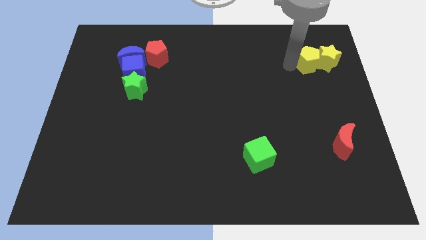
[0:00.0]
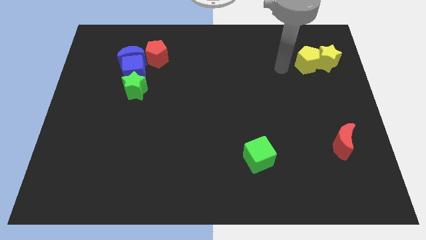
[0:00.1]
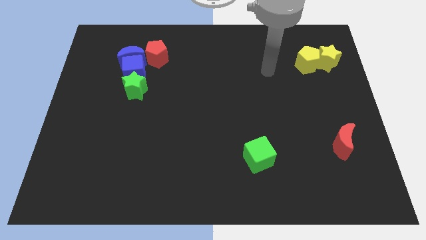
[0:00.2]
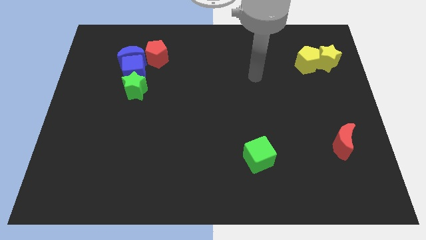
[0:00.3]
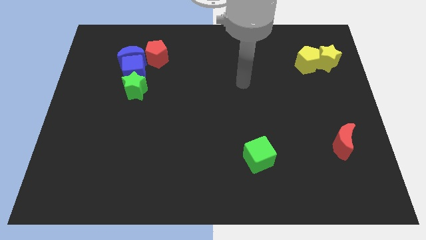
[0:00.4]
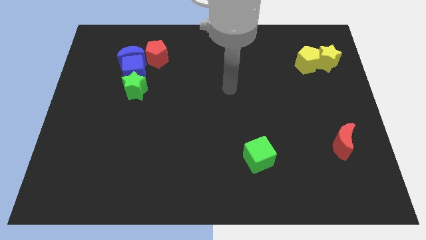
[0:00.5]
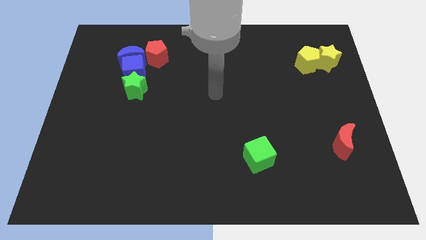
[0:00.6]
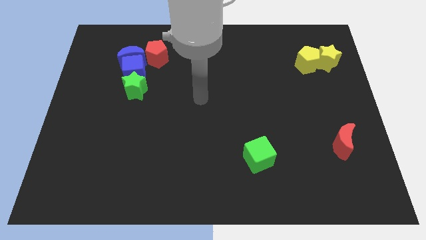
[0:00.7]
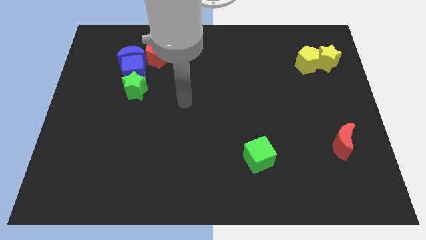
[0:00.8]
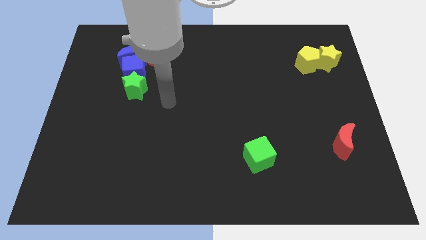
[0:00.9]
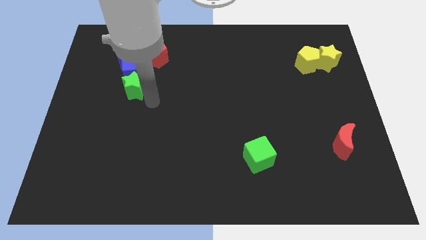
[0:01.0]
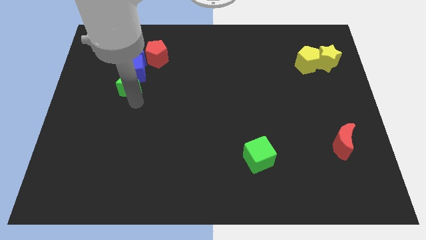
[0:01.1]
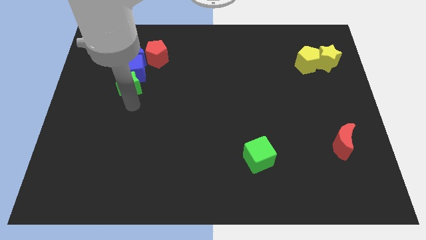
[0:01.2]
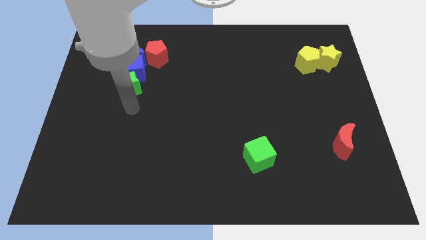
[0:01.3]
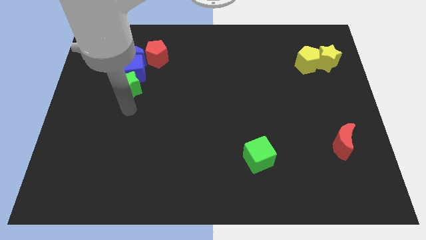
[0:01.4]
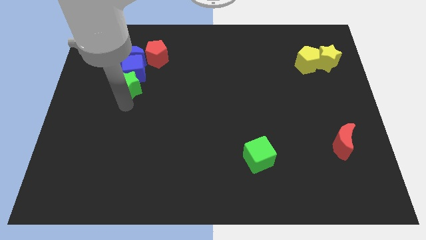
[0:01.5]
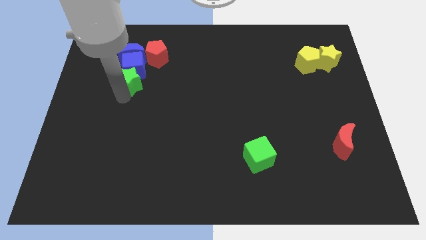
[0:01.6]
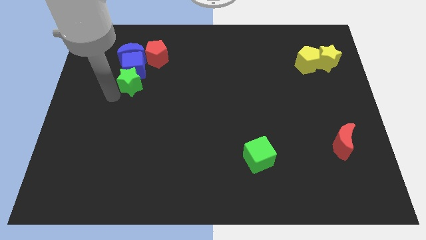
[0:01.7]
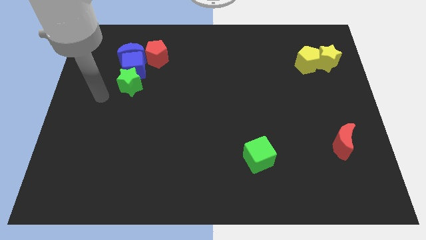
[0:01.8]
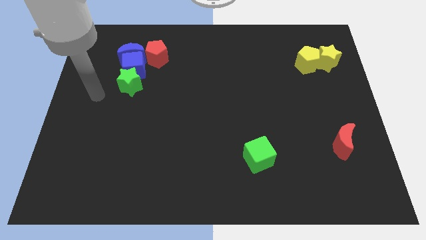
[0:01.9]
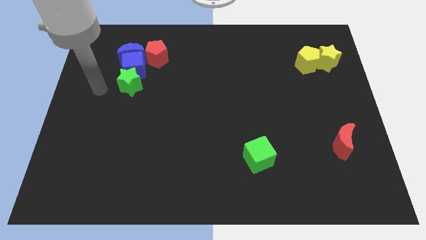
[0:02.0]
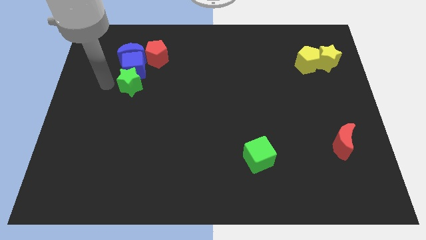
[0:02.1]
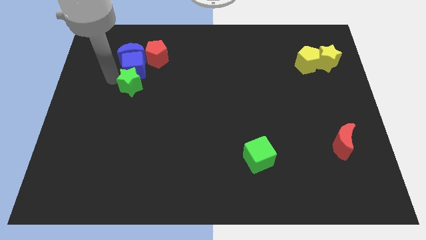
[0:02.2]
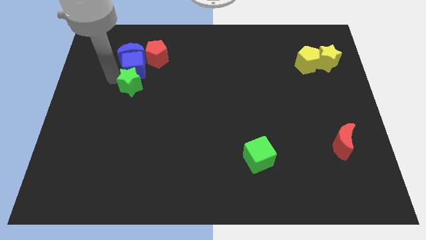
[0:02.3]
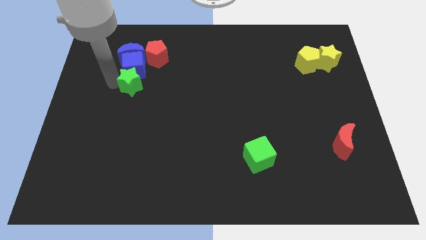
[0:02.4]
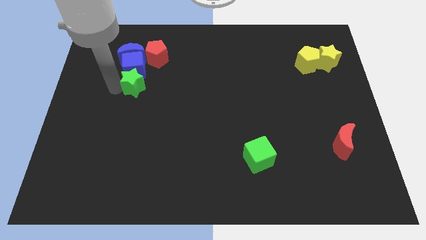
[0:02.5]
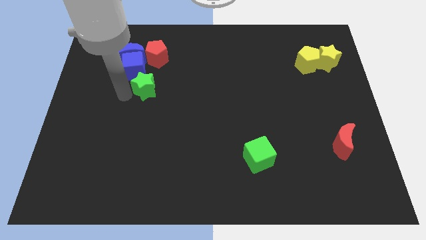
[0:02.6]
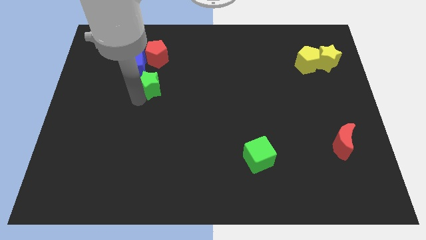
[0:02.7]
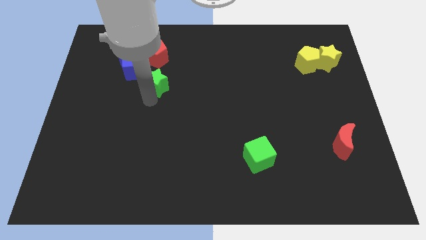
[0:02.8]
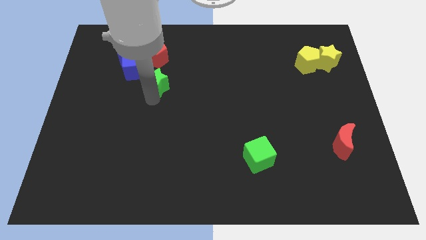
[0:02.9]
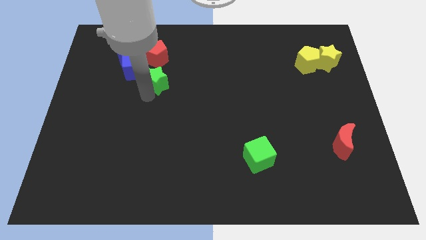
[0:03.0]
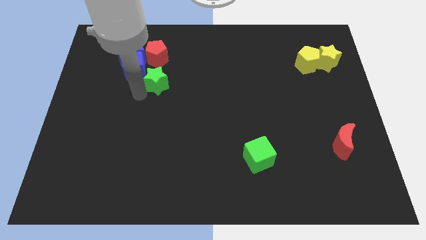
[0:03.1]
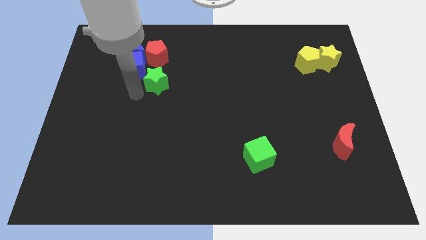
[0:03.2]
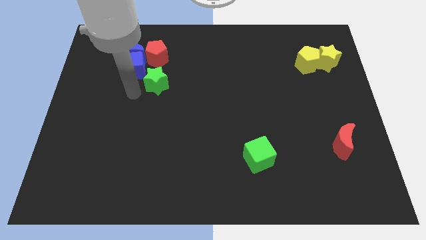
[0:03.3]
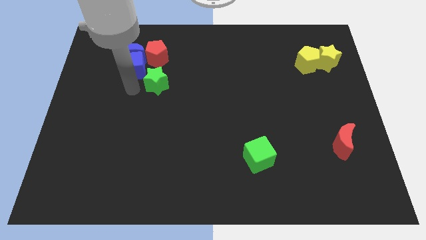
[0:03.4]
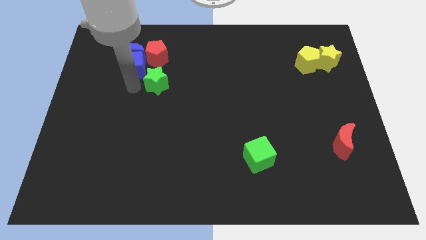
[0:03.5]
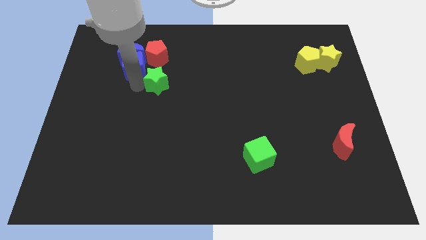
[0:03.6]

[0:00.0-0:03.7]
separate the green star from the blue cube

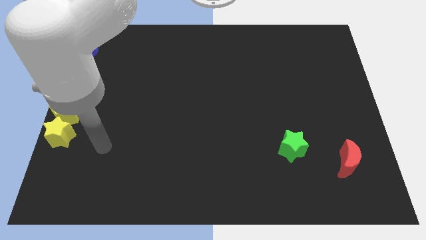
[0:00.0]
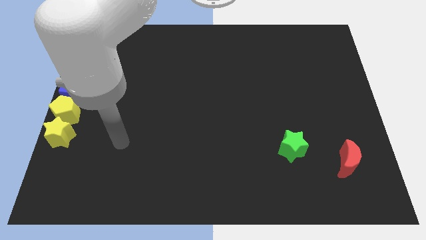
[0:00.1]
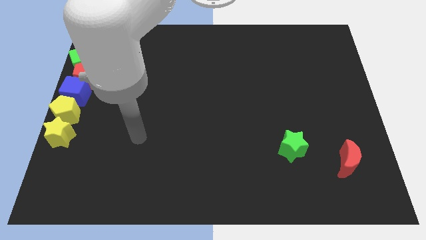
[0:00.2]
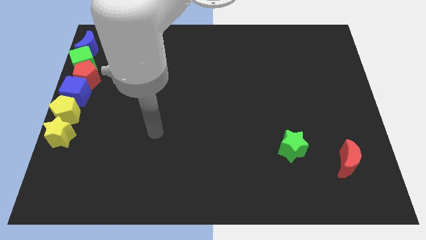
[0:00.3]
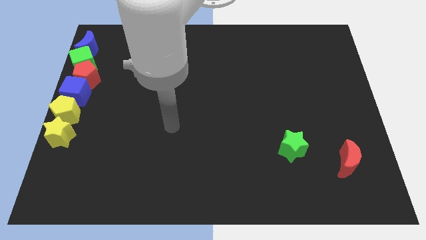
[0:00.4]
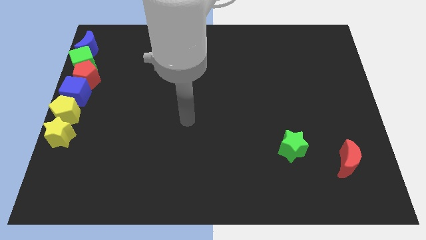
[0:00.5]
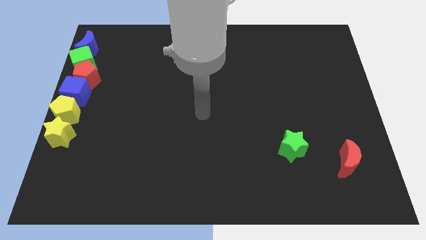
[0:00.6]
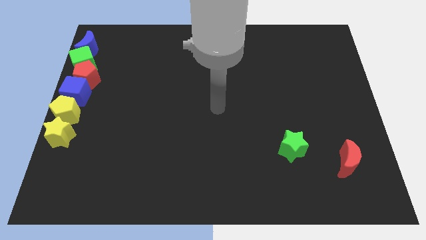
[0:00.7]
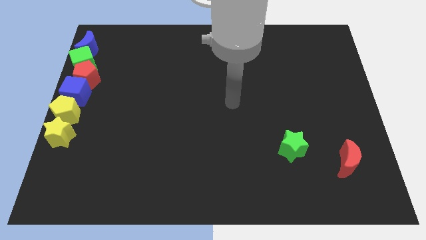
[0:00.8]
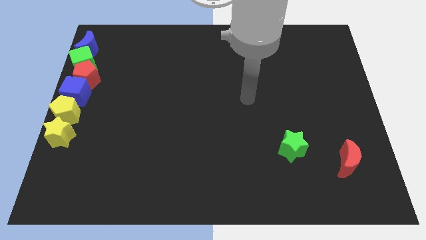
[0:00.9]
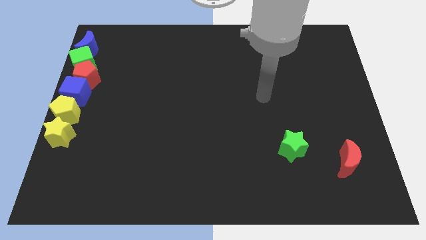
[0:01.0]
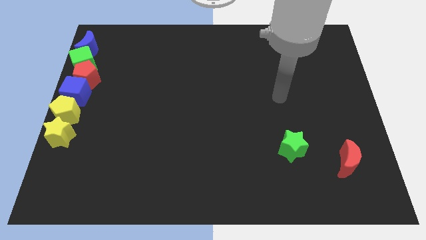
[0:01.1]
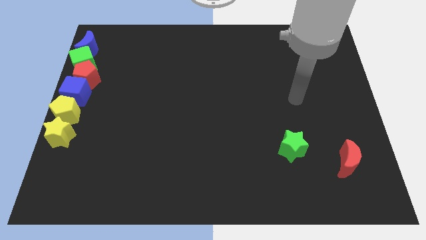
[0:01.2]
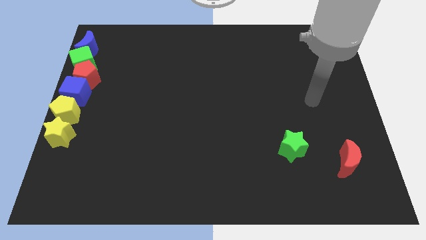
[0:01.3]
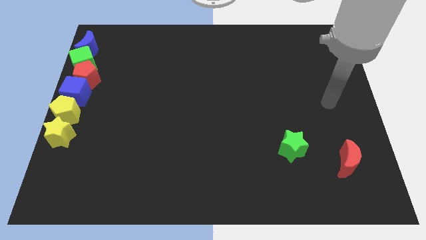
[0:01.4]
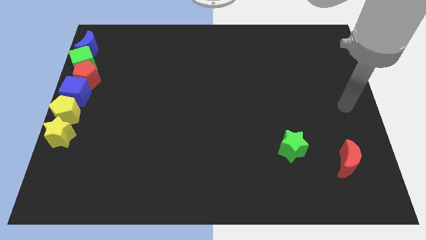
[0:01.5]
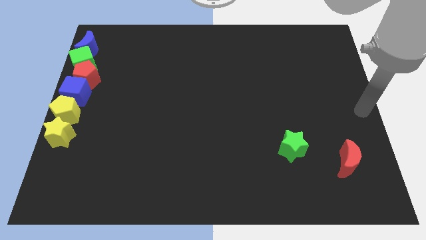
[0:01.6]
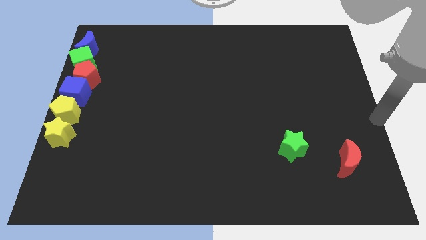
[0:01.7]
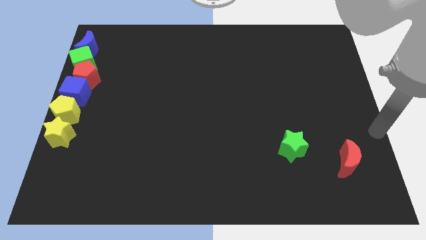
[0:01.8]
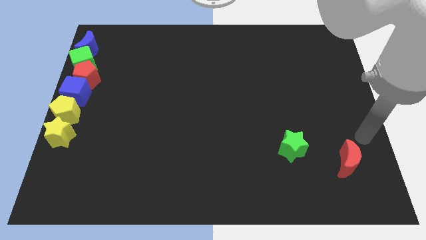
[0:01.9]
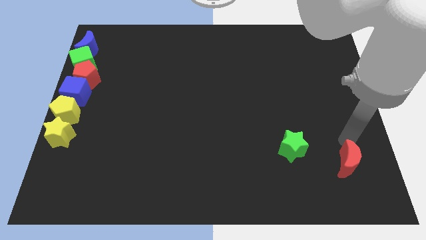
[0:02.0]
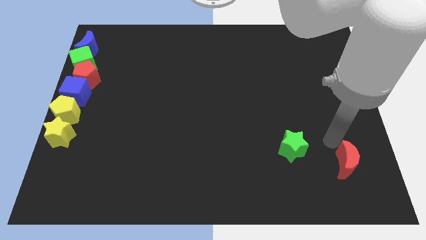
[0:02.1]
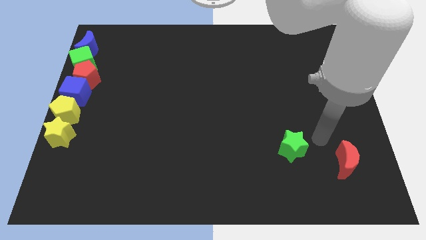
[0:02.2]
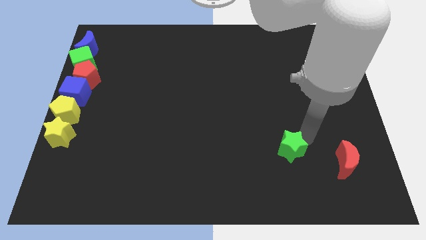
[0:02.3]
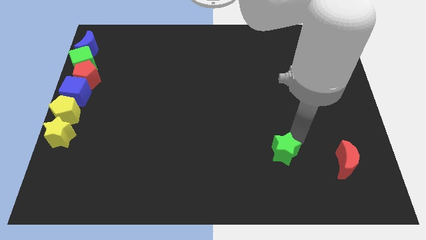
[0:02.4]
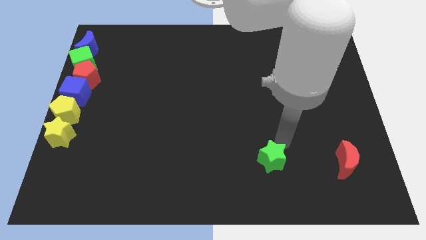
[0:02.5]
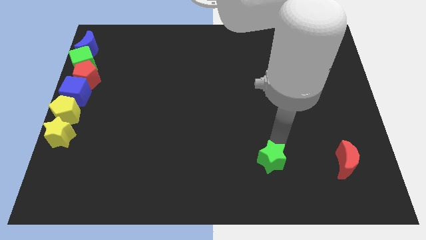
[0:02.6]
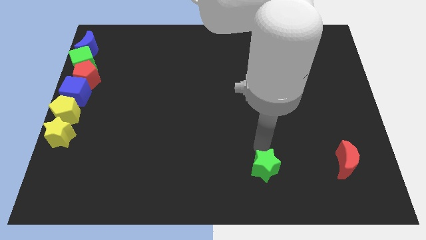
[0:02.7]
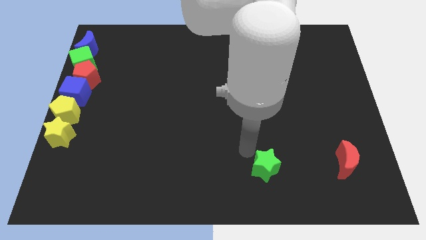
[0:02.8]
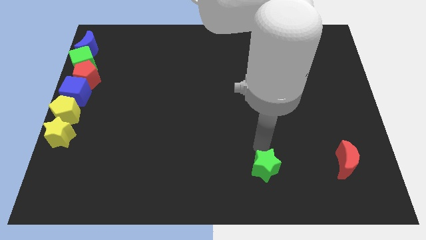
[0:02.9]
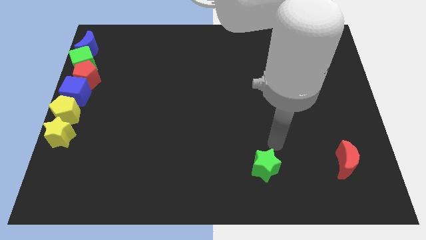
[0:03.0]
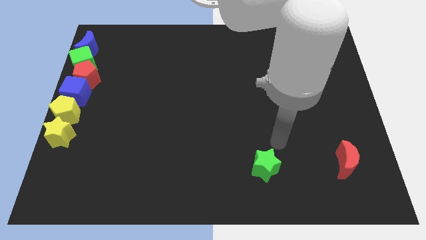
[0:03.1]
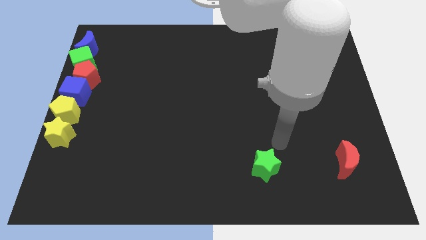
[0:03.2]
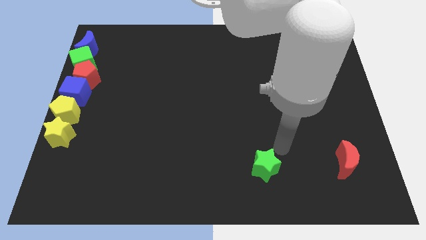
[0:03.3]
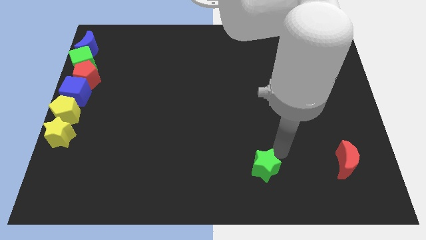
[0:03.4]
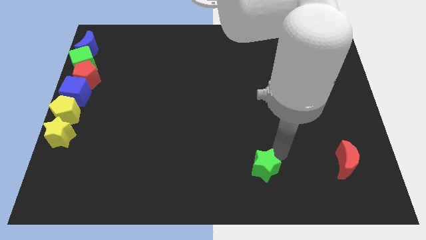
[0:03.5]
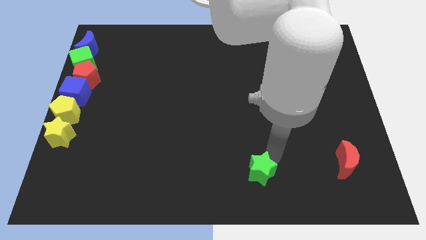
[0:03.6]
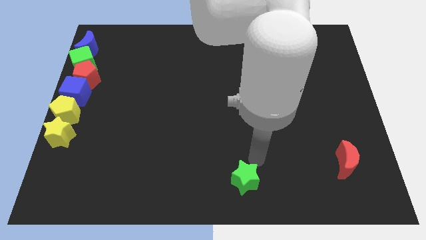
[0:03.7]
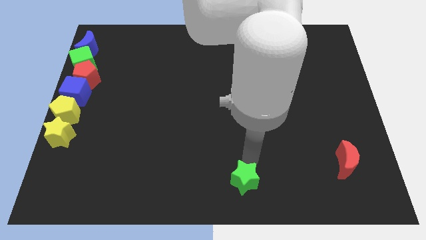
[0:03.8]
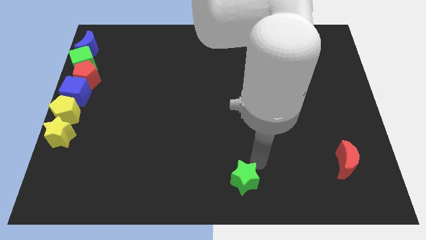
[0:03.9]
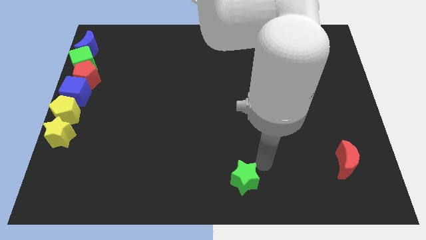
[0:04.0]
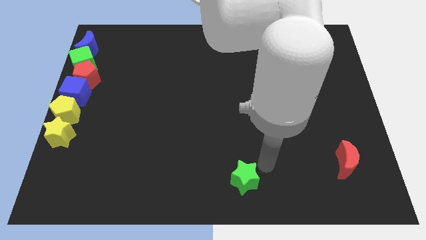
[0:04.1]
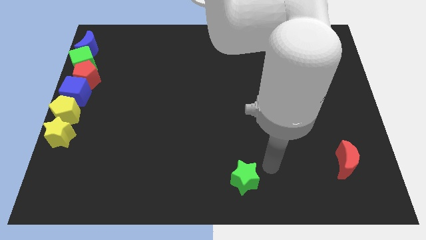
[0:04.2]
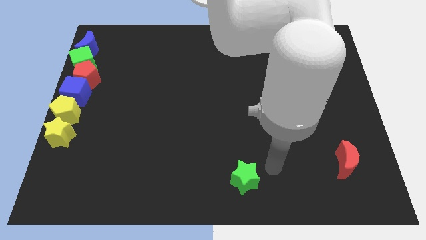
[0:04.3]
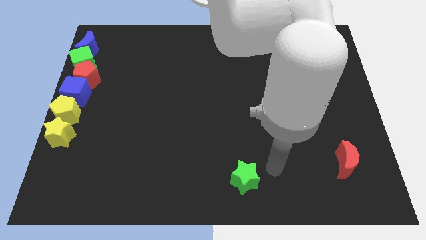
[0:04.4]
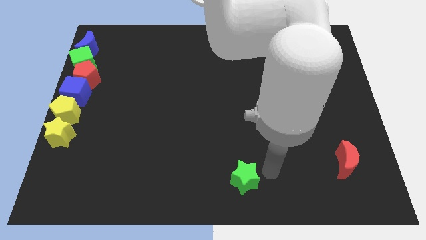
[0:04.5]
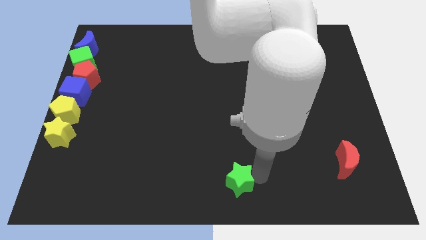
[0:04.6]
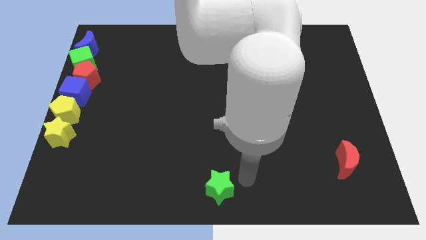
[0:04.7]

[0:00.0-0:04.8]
place the green star at the bottom center of the board

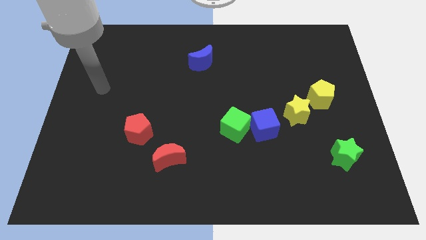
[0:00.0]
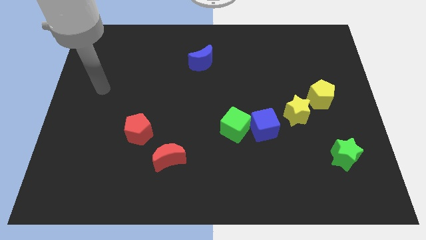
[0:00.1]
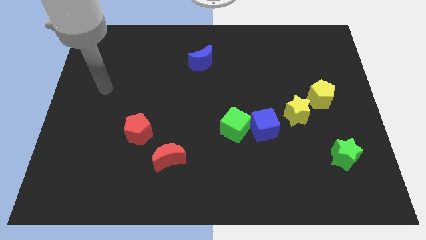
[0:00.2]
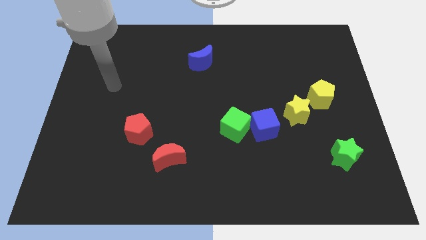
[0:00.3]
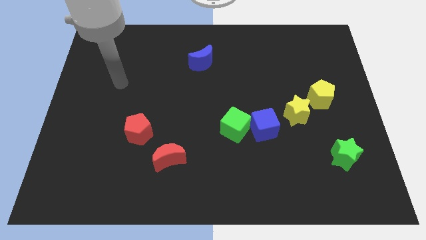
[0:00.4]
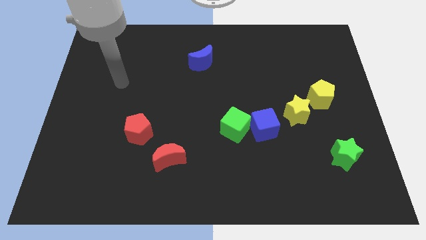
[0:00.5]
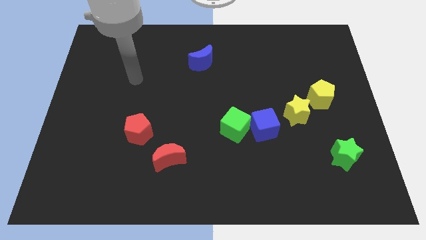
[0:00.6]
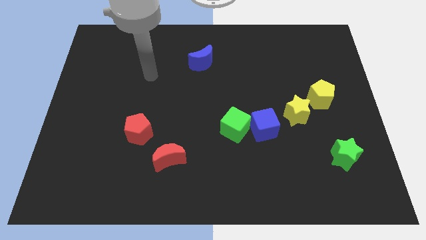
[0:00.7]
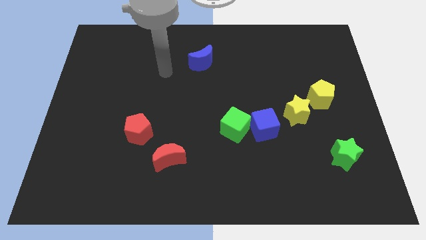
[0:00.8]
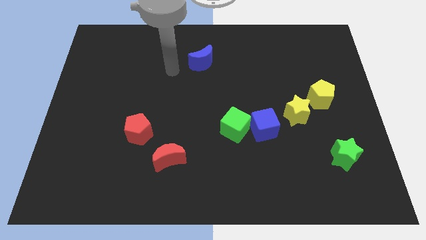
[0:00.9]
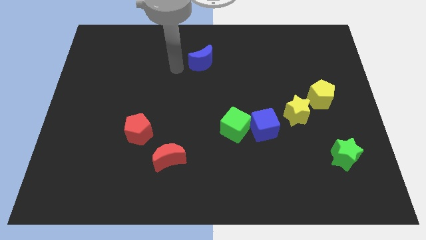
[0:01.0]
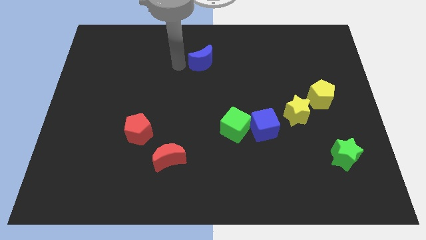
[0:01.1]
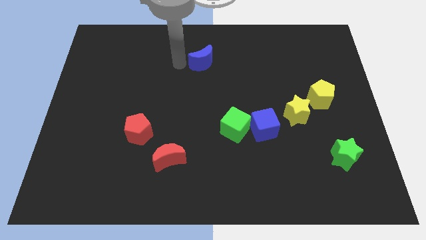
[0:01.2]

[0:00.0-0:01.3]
move your hand close to the left side of the blue moon
